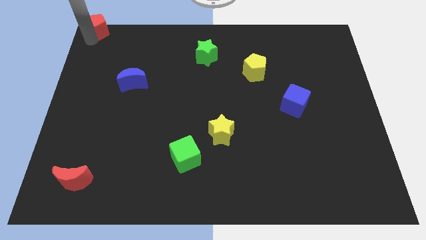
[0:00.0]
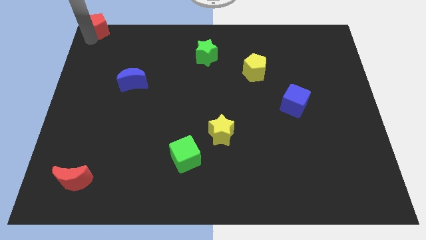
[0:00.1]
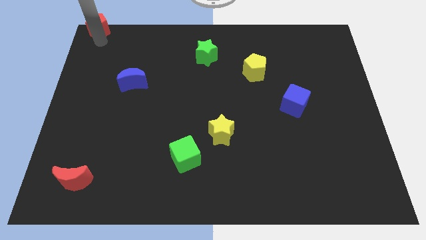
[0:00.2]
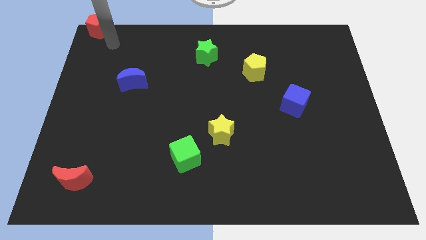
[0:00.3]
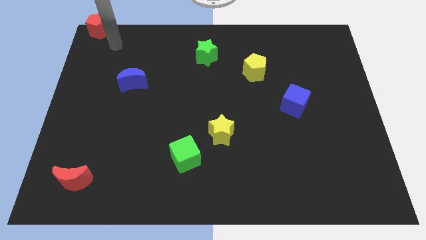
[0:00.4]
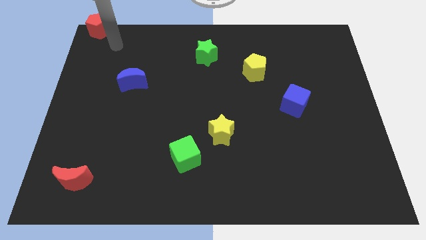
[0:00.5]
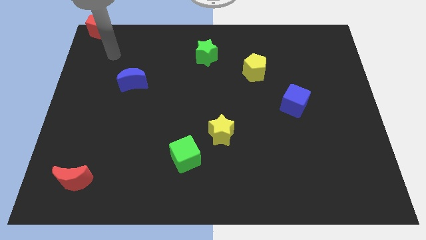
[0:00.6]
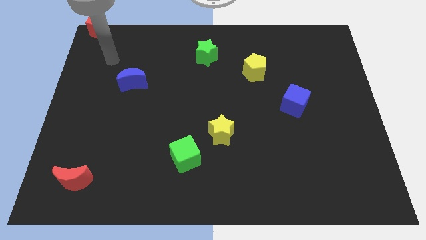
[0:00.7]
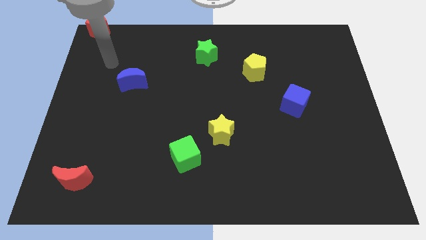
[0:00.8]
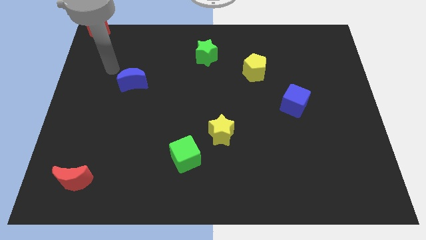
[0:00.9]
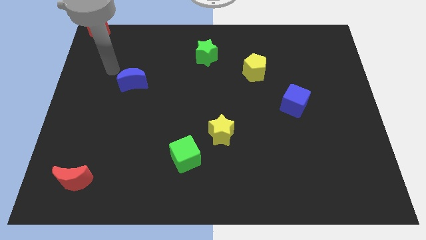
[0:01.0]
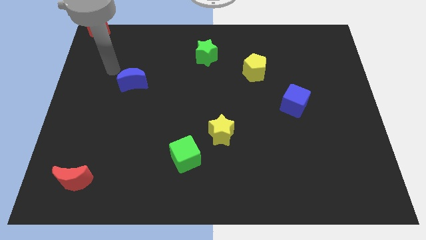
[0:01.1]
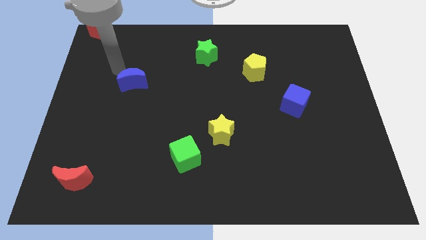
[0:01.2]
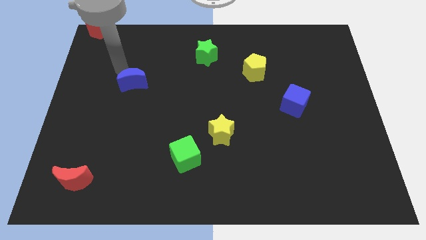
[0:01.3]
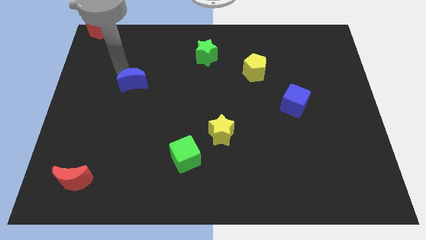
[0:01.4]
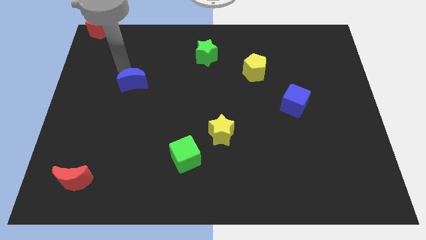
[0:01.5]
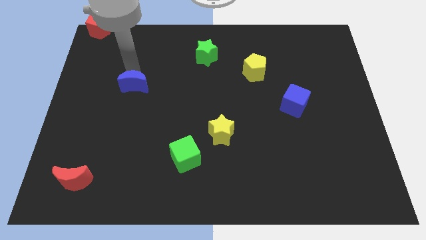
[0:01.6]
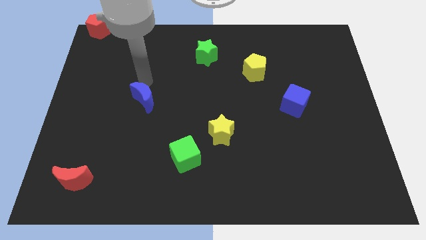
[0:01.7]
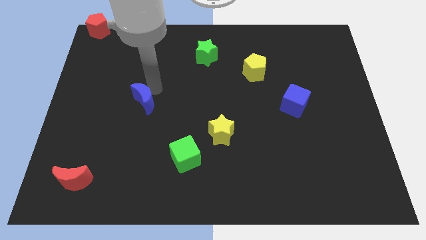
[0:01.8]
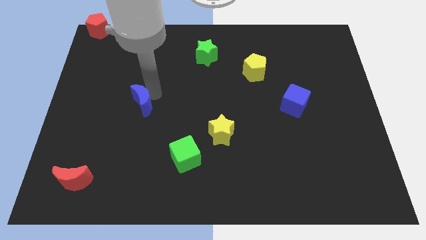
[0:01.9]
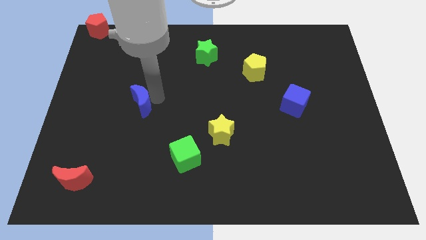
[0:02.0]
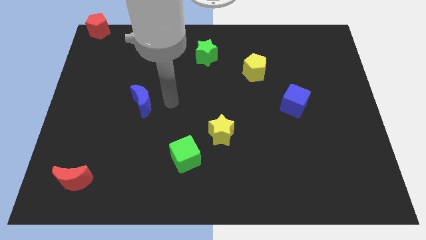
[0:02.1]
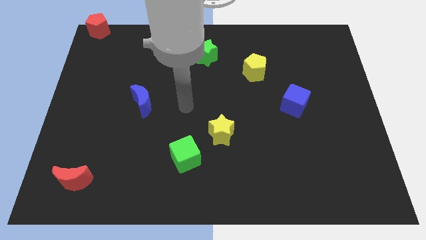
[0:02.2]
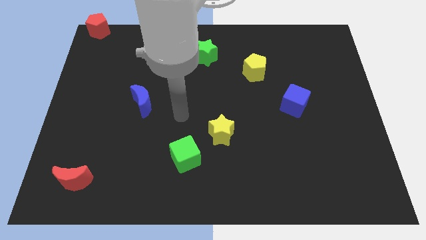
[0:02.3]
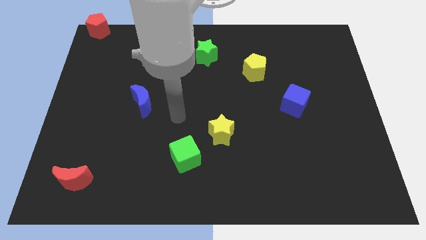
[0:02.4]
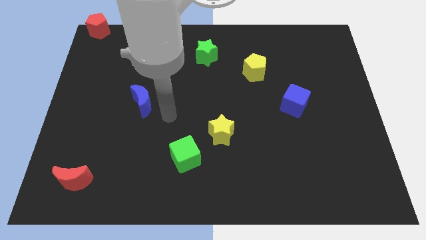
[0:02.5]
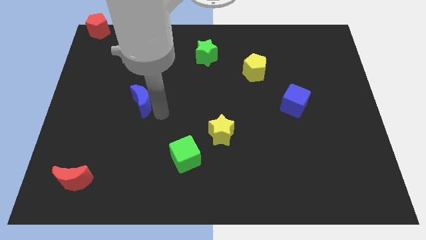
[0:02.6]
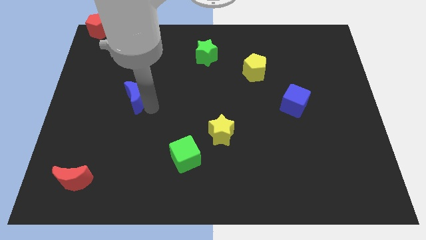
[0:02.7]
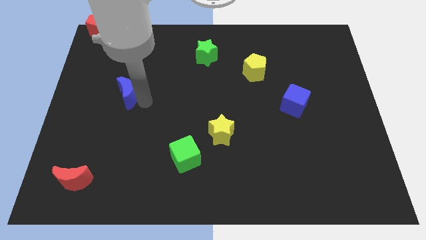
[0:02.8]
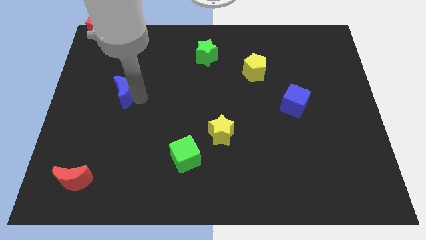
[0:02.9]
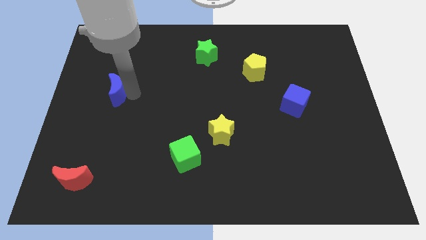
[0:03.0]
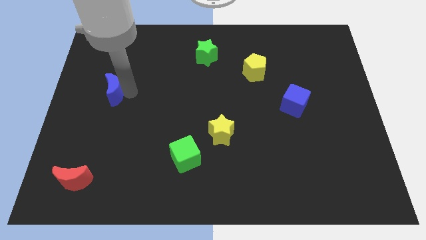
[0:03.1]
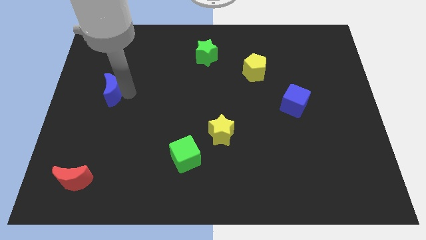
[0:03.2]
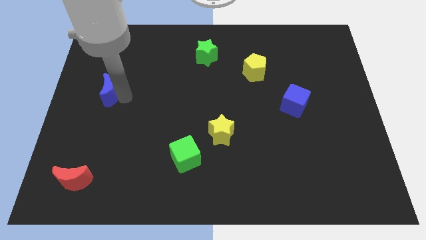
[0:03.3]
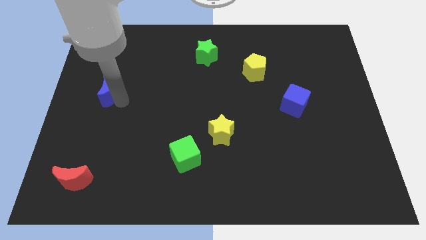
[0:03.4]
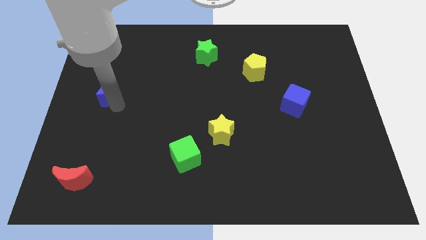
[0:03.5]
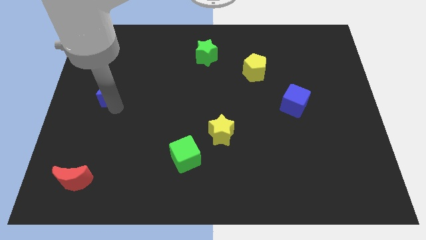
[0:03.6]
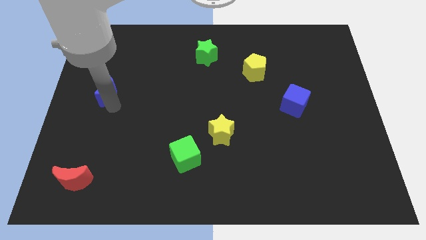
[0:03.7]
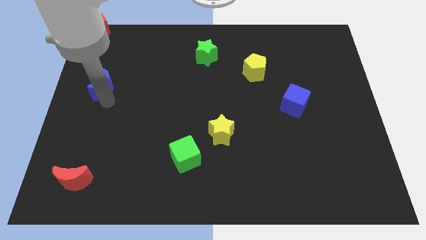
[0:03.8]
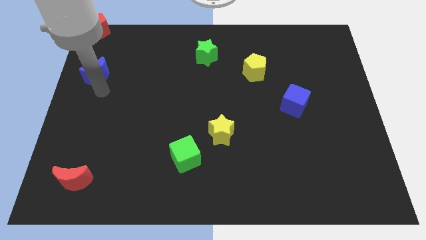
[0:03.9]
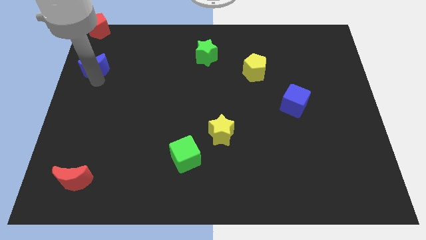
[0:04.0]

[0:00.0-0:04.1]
place the blue crescent vertically below the red pentagon

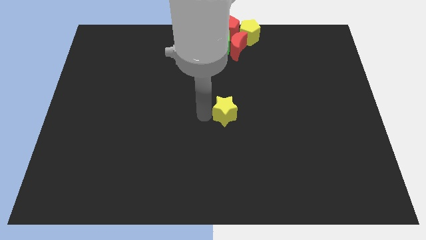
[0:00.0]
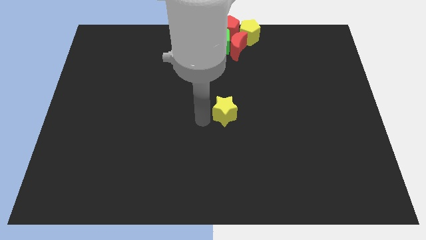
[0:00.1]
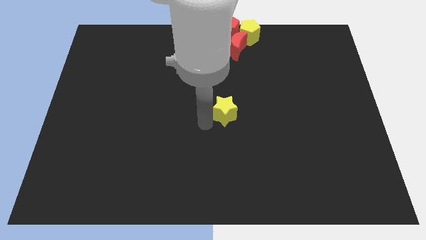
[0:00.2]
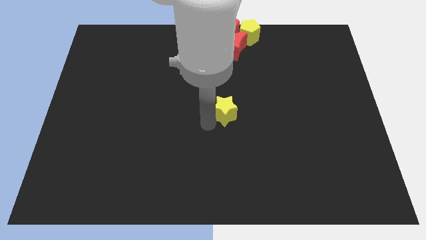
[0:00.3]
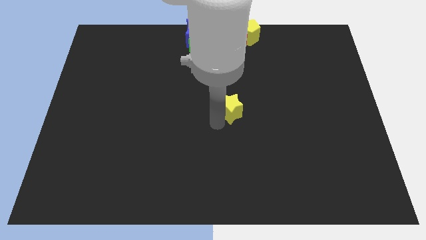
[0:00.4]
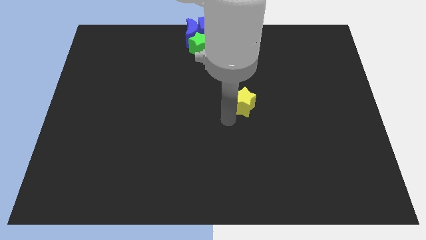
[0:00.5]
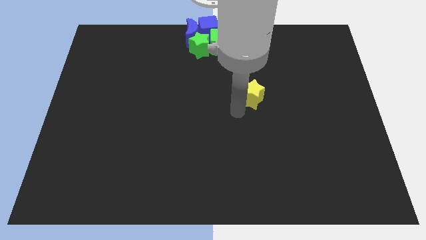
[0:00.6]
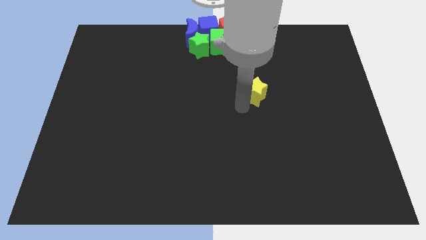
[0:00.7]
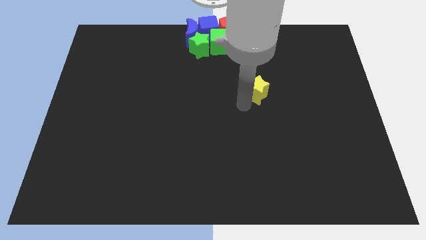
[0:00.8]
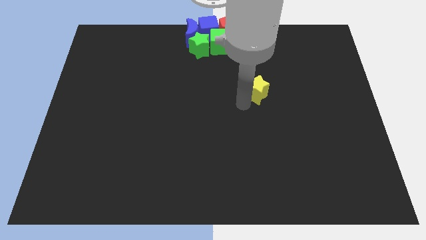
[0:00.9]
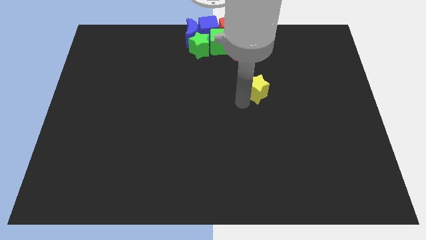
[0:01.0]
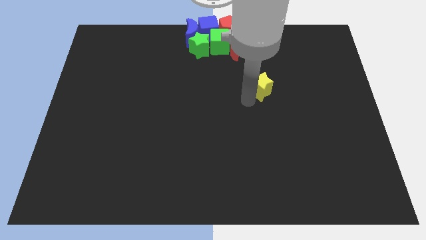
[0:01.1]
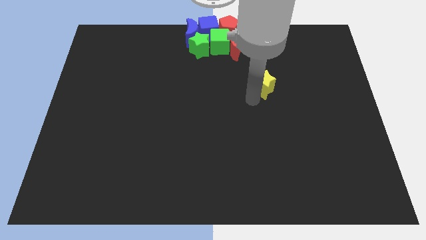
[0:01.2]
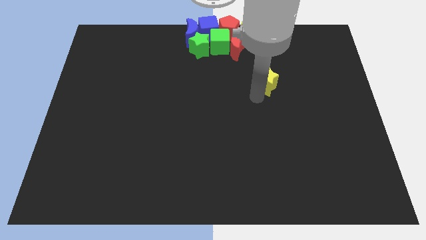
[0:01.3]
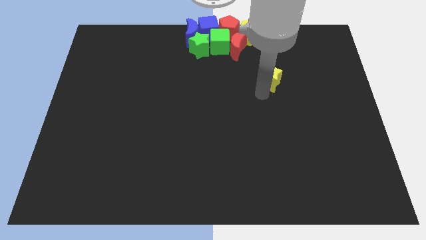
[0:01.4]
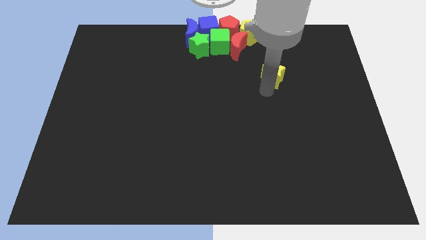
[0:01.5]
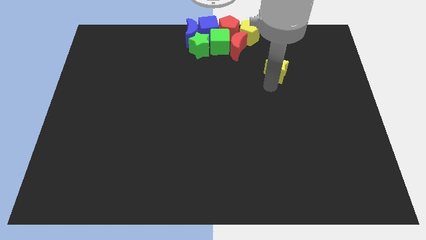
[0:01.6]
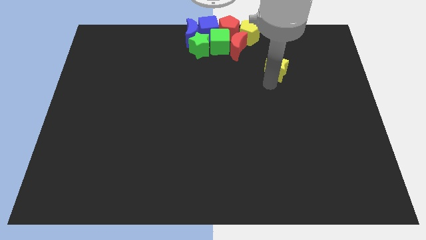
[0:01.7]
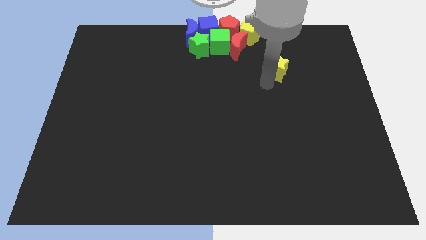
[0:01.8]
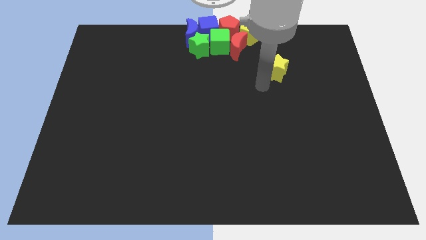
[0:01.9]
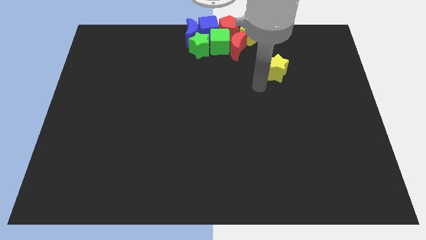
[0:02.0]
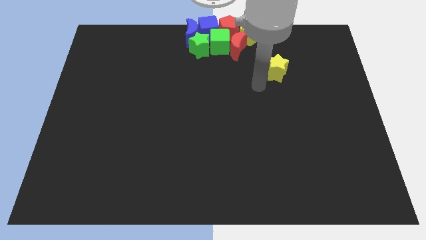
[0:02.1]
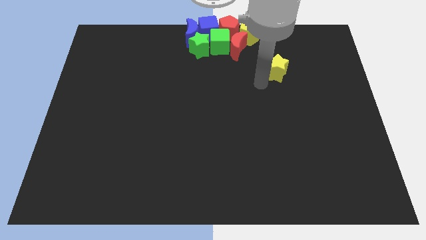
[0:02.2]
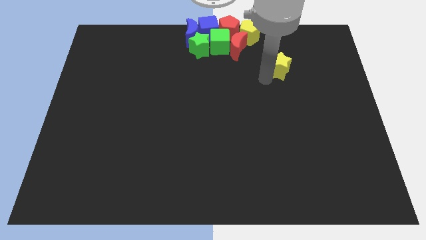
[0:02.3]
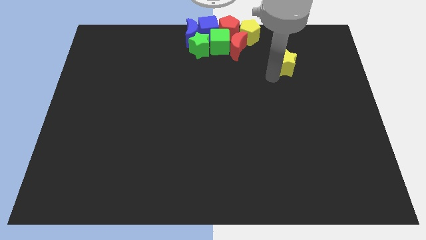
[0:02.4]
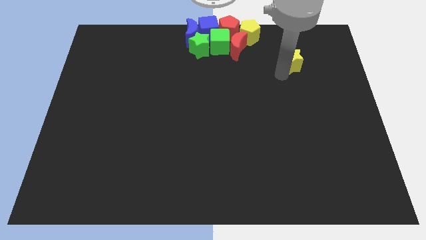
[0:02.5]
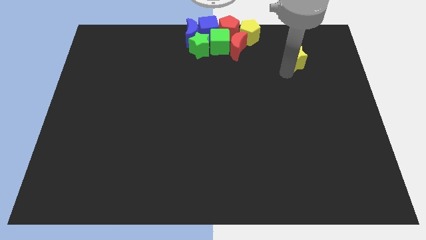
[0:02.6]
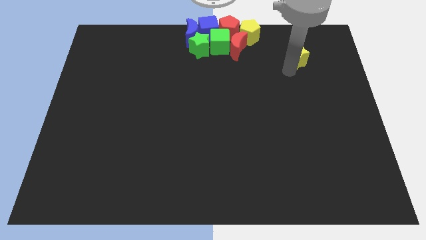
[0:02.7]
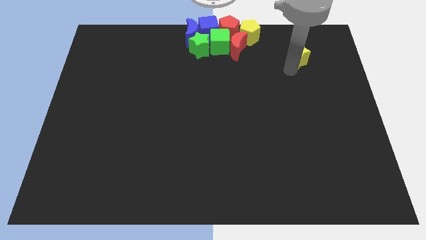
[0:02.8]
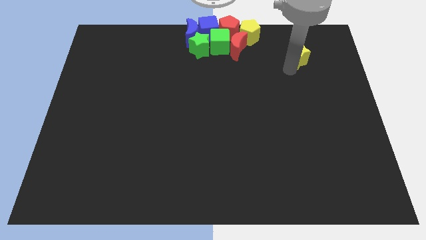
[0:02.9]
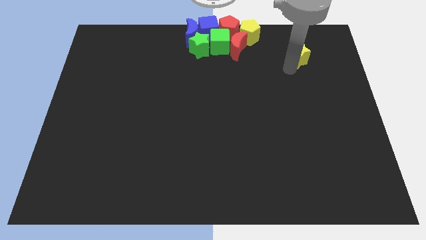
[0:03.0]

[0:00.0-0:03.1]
push the yellow star to the bottom right side of the yellow pentagon

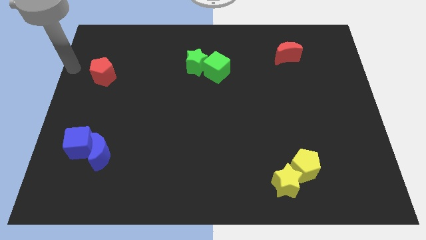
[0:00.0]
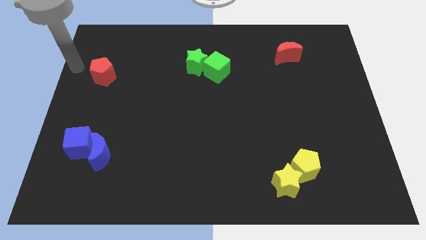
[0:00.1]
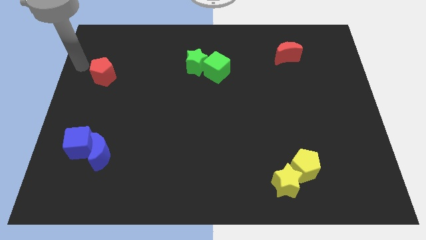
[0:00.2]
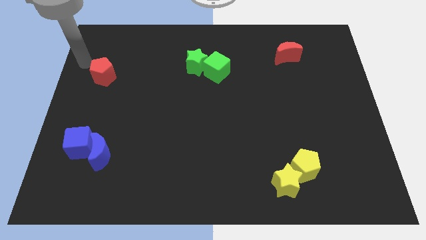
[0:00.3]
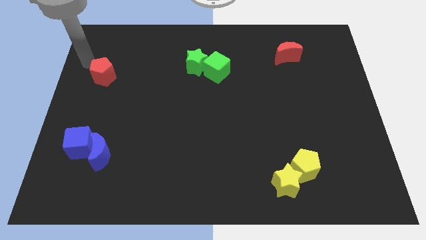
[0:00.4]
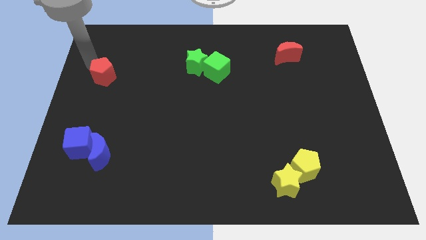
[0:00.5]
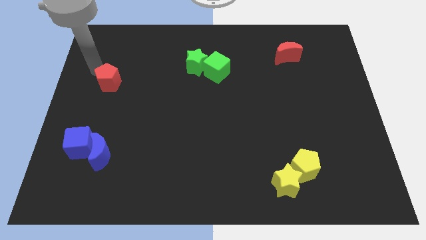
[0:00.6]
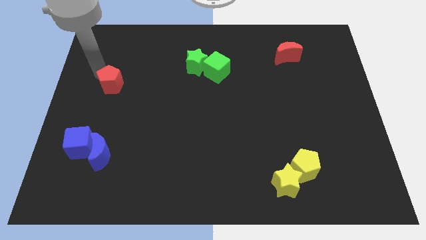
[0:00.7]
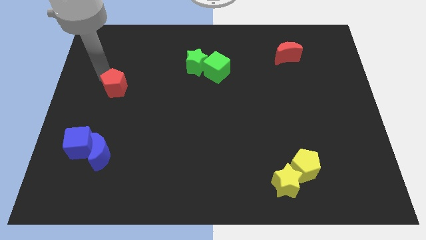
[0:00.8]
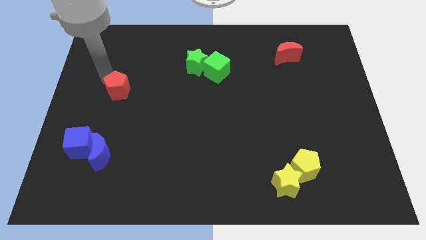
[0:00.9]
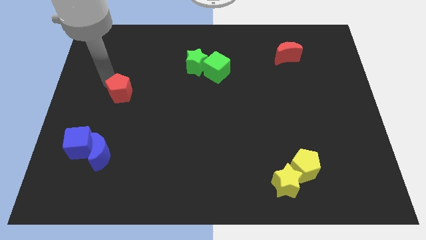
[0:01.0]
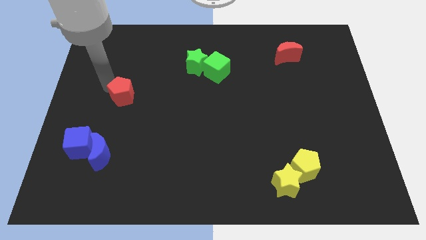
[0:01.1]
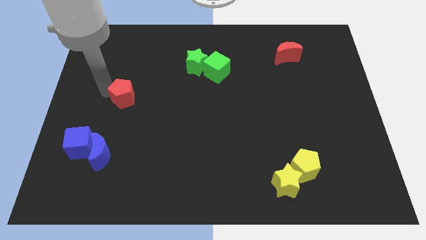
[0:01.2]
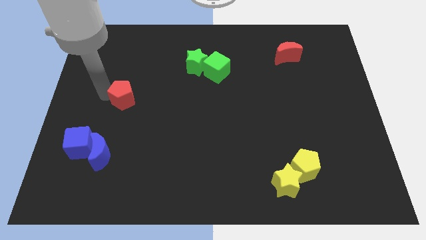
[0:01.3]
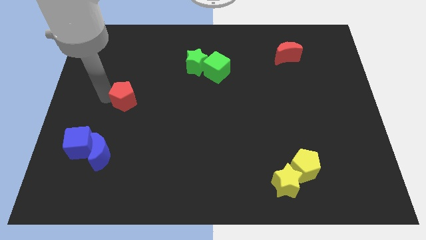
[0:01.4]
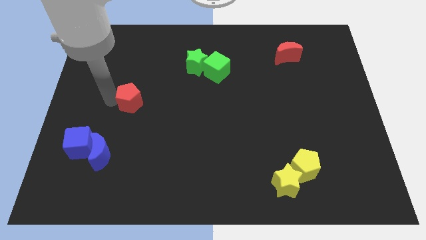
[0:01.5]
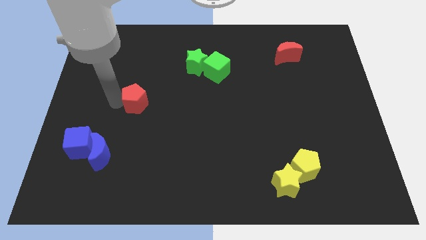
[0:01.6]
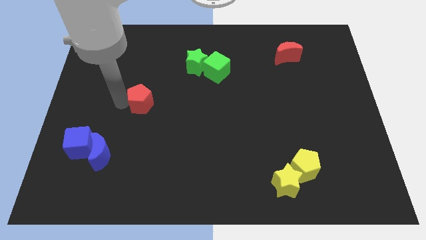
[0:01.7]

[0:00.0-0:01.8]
move the red pentagon to the bottom of the board
